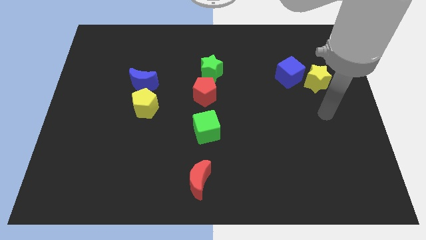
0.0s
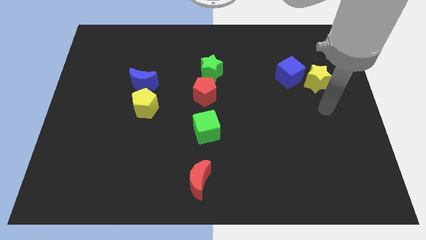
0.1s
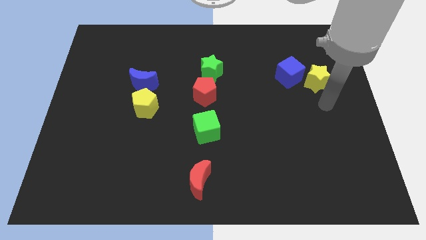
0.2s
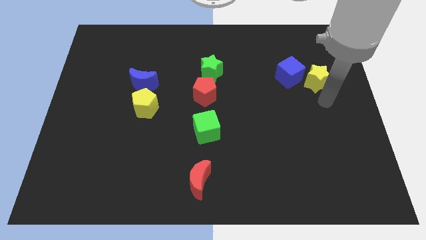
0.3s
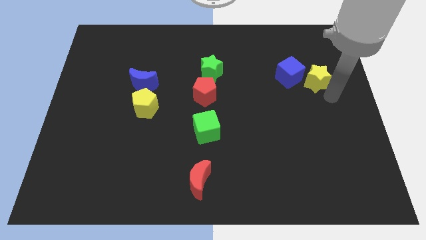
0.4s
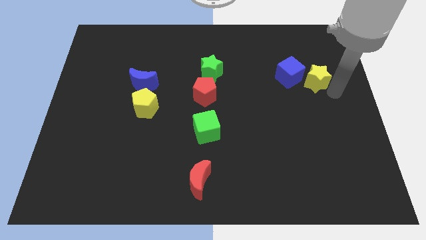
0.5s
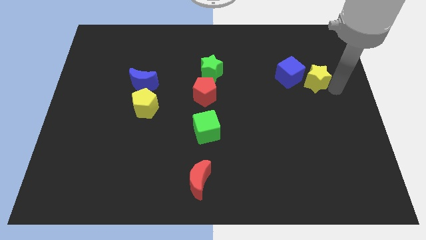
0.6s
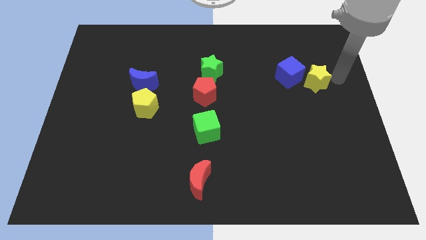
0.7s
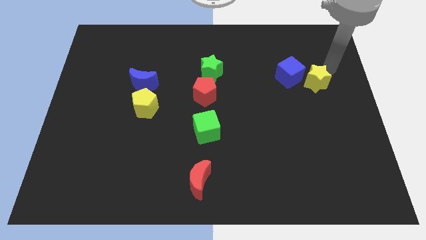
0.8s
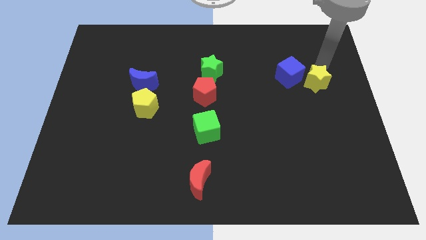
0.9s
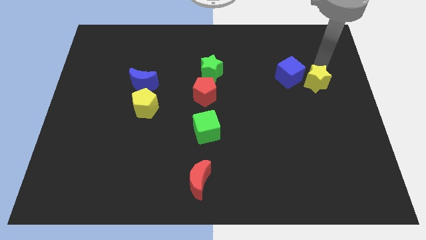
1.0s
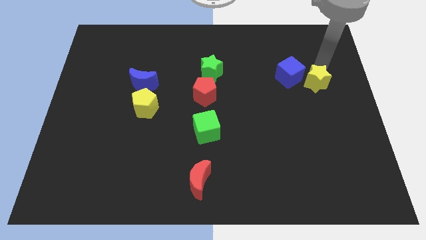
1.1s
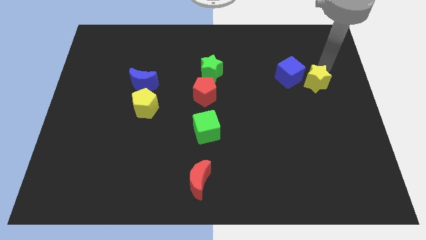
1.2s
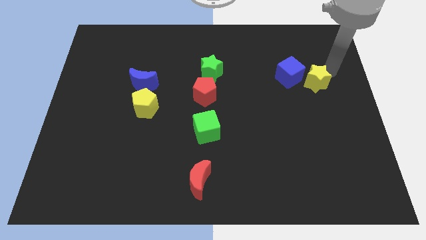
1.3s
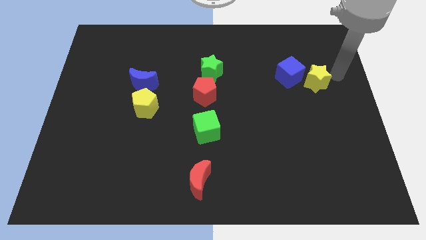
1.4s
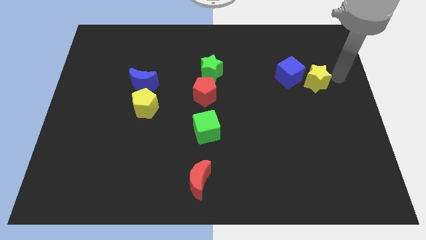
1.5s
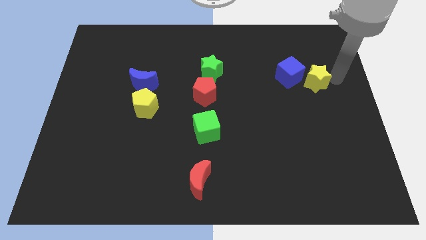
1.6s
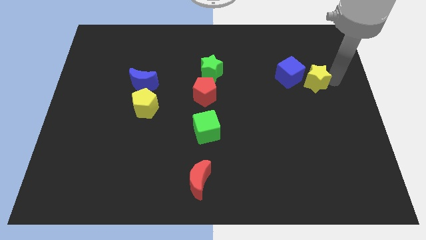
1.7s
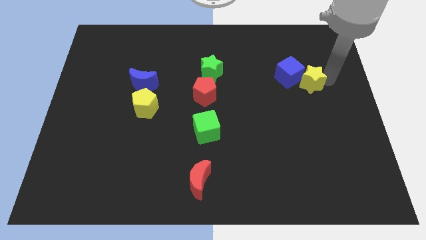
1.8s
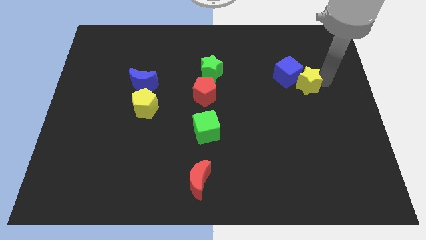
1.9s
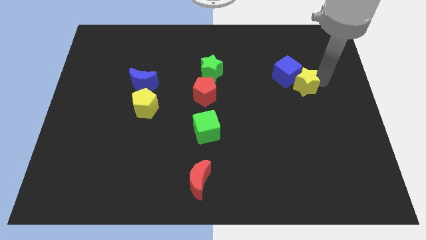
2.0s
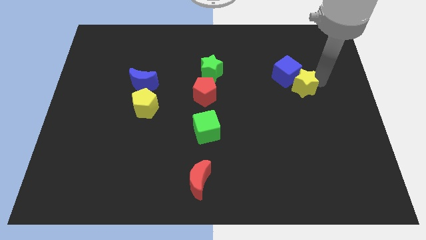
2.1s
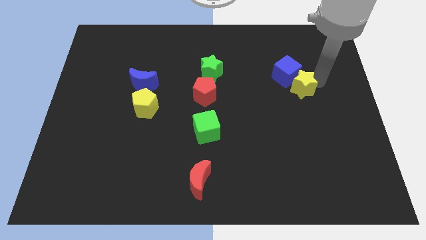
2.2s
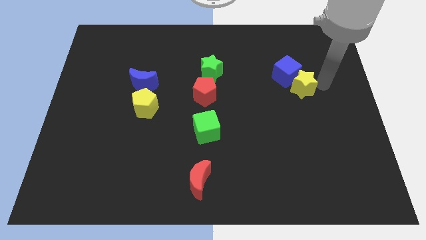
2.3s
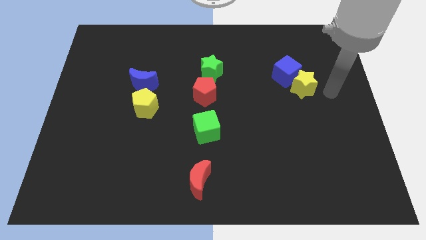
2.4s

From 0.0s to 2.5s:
slightly push the yellow star towards the down of the board

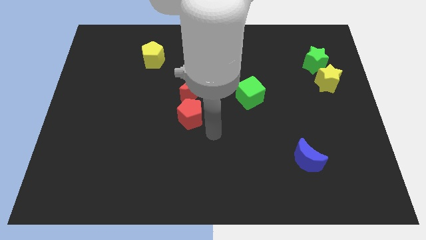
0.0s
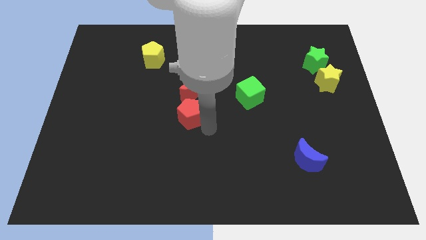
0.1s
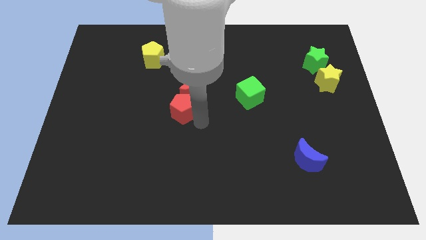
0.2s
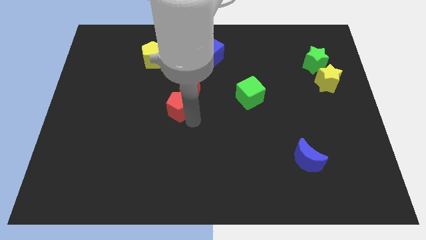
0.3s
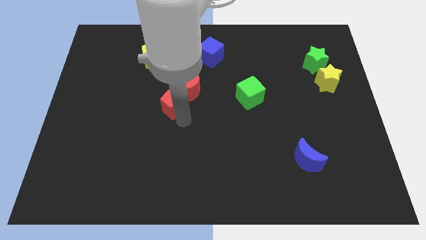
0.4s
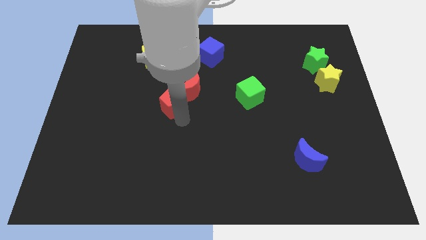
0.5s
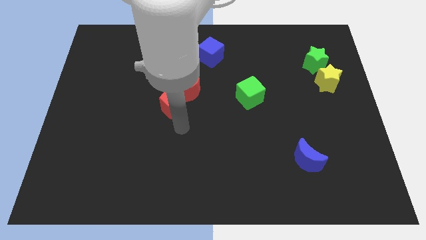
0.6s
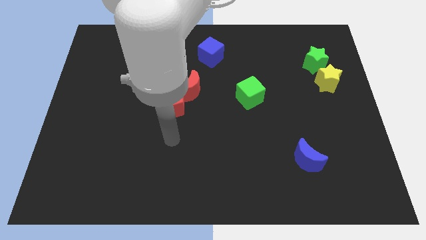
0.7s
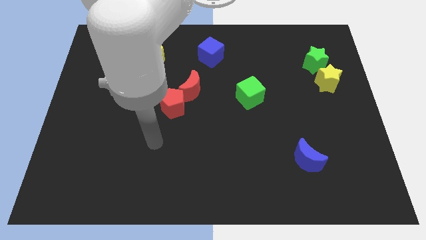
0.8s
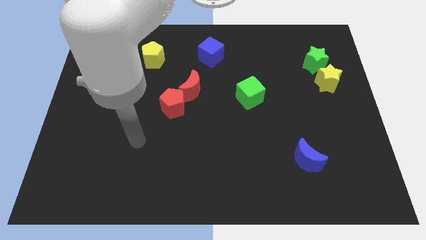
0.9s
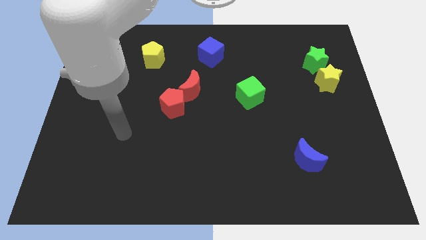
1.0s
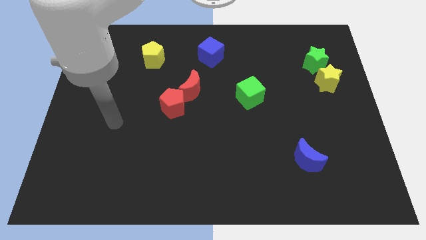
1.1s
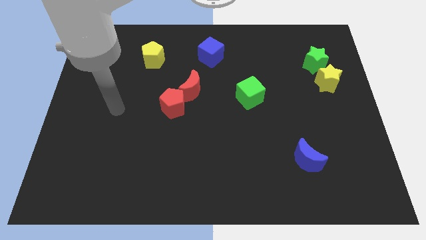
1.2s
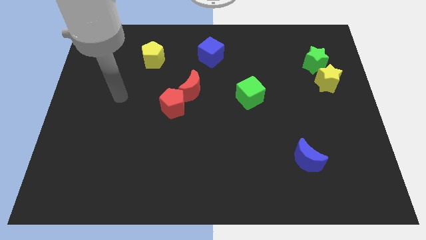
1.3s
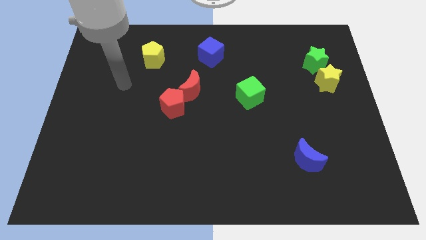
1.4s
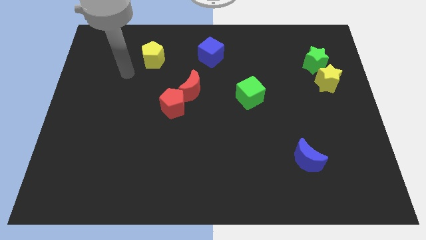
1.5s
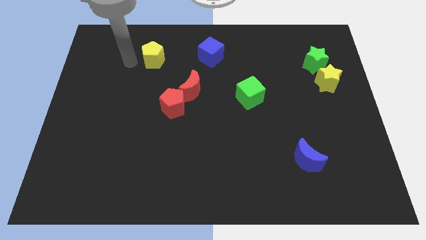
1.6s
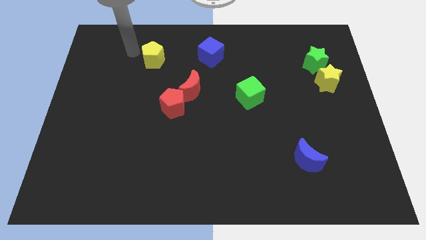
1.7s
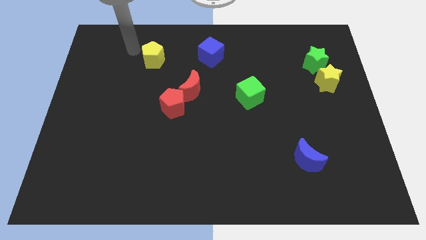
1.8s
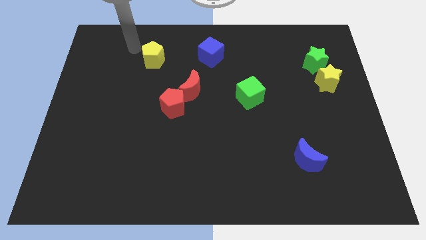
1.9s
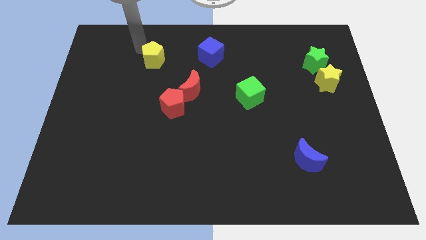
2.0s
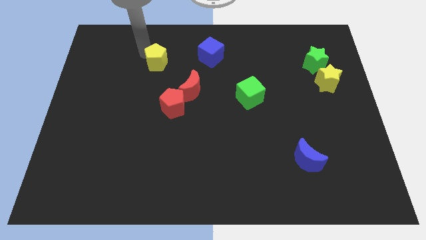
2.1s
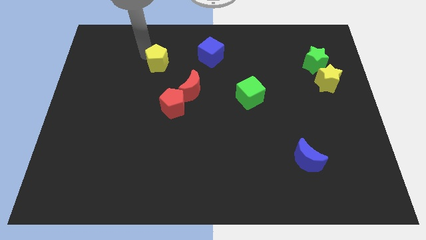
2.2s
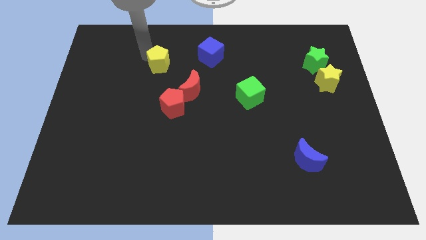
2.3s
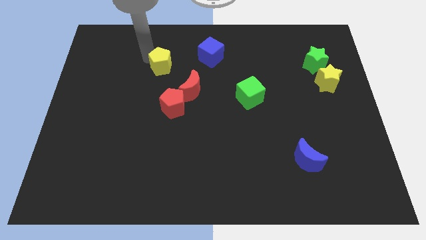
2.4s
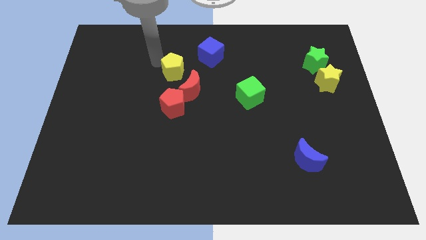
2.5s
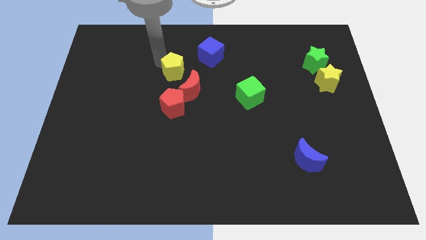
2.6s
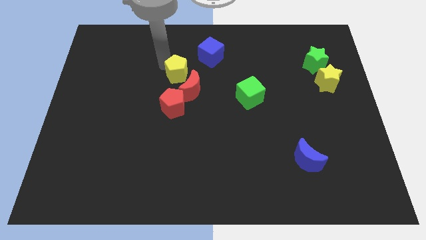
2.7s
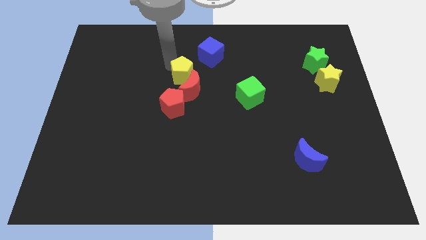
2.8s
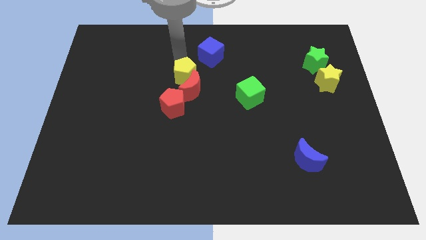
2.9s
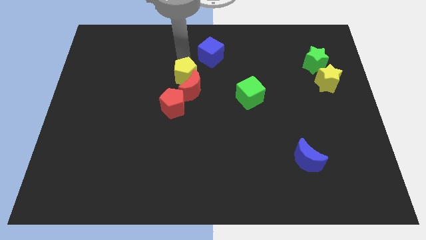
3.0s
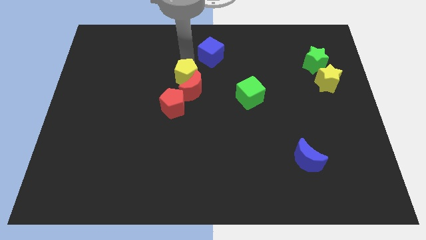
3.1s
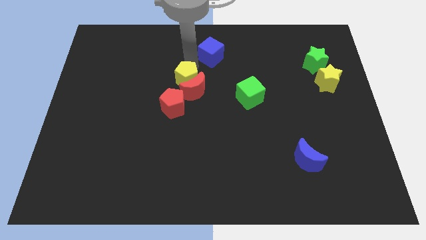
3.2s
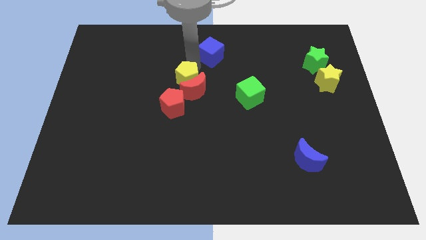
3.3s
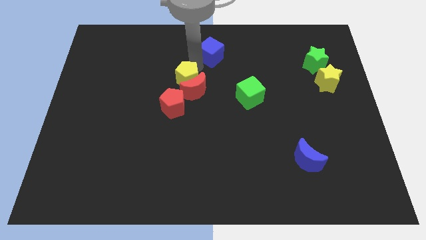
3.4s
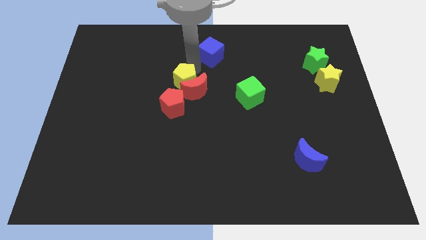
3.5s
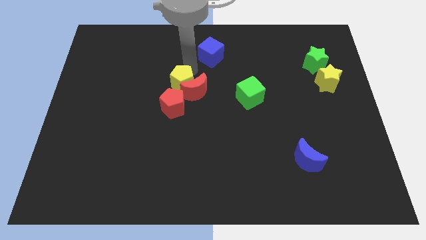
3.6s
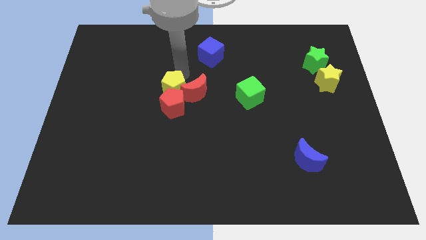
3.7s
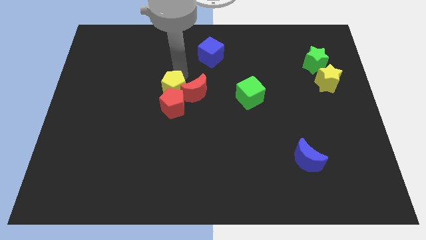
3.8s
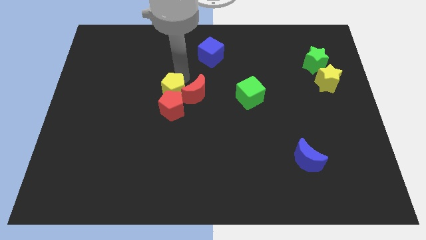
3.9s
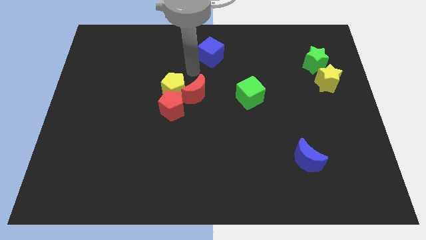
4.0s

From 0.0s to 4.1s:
push the yellow pentagon into the red blocks

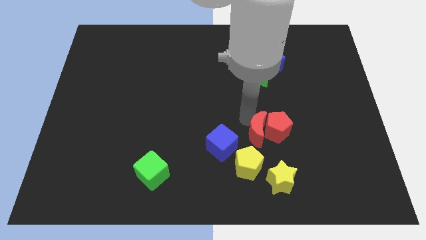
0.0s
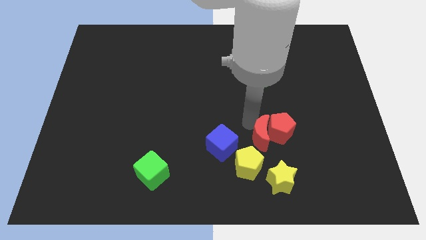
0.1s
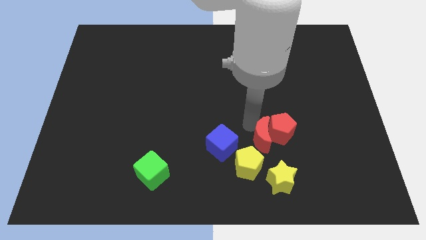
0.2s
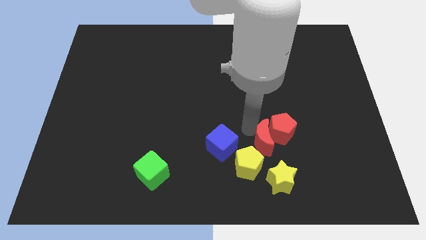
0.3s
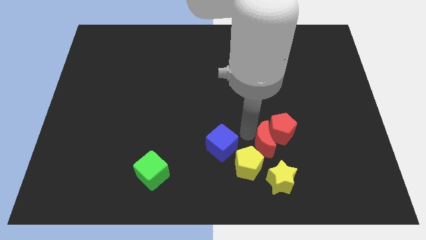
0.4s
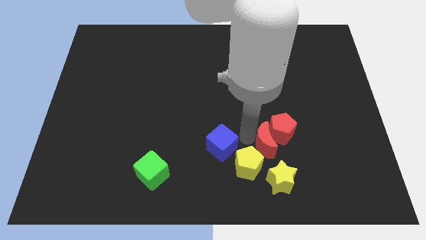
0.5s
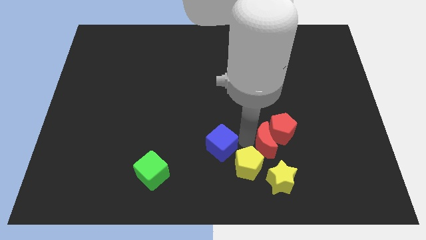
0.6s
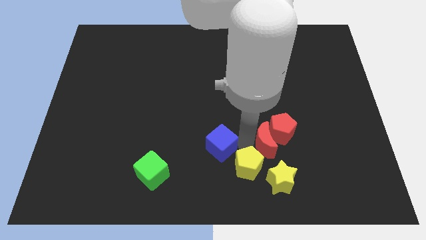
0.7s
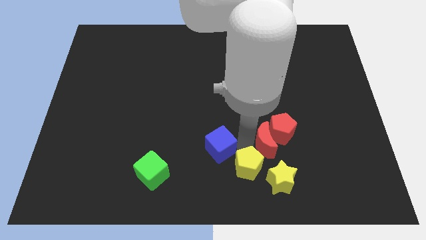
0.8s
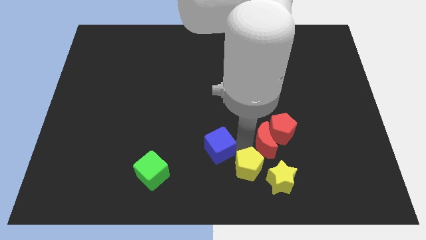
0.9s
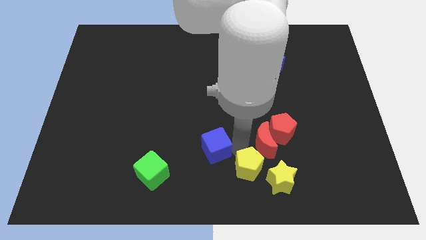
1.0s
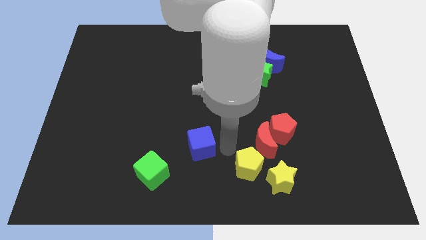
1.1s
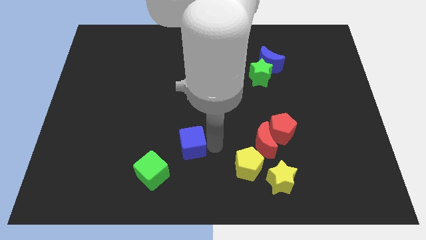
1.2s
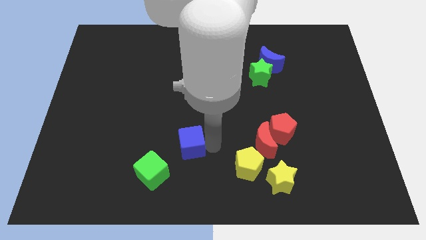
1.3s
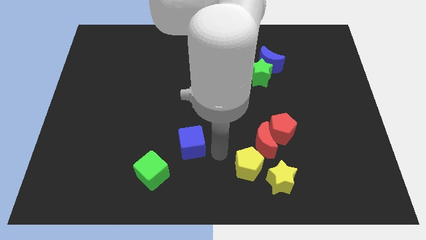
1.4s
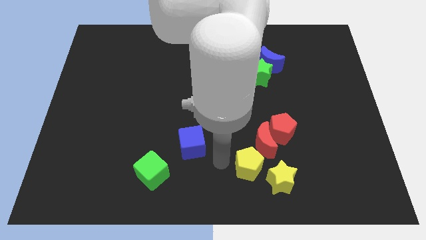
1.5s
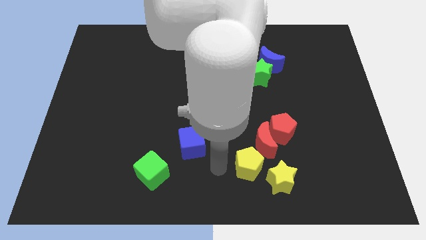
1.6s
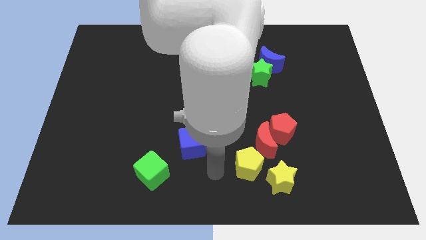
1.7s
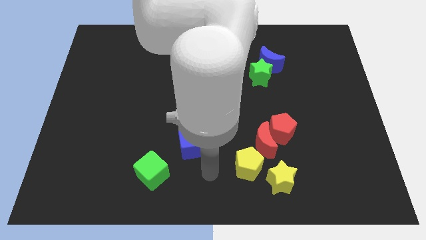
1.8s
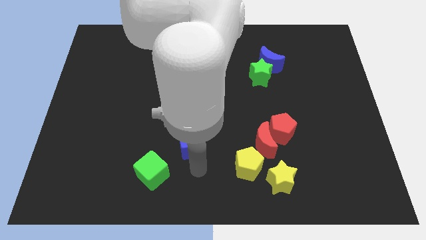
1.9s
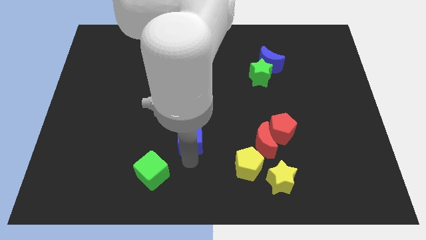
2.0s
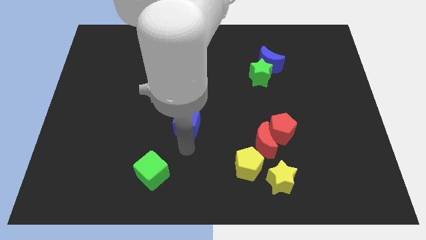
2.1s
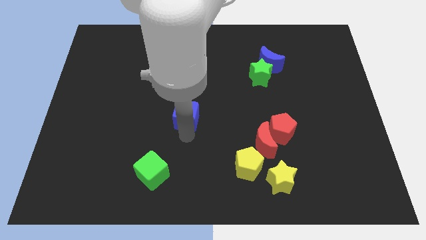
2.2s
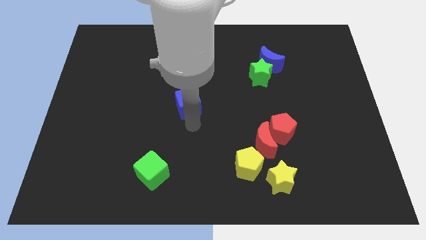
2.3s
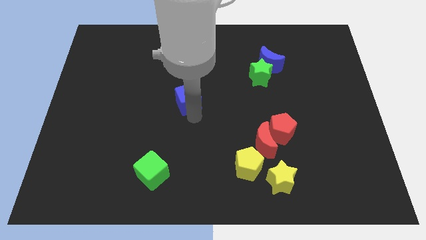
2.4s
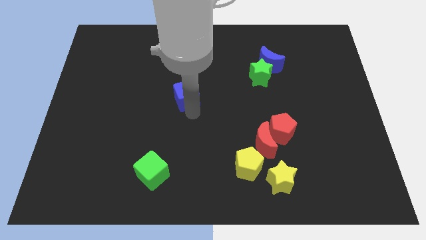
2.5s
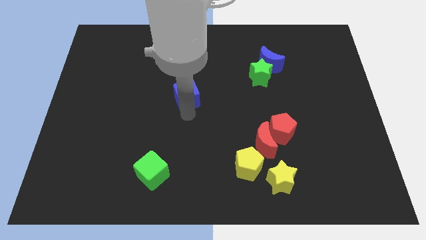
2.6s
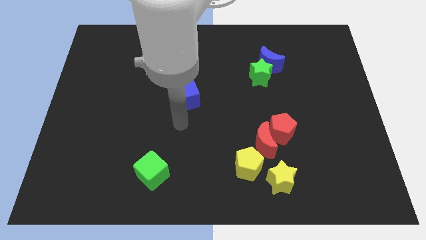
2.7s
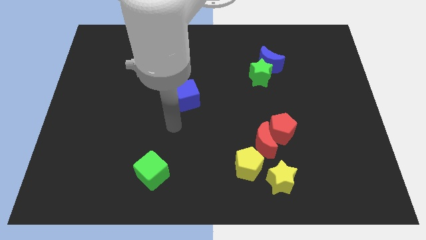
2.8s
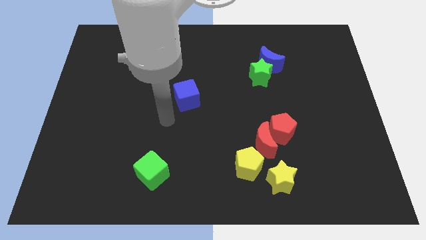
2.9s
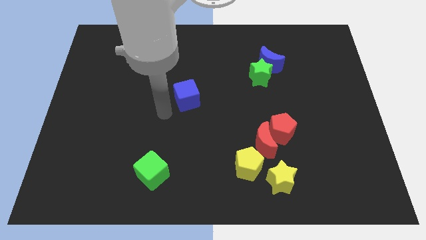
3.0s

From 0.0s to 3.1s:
separate blue cube and yellow pentagon
